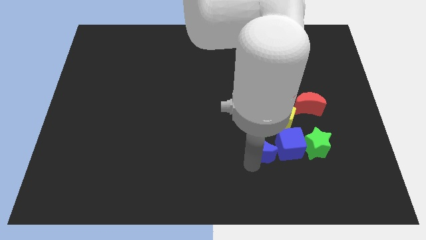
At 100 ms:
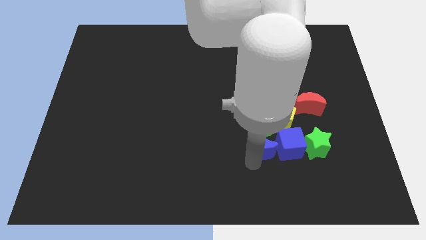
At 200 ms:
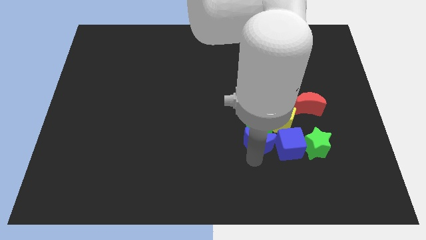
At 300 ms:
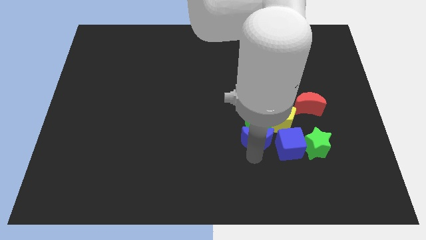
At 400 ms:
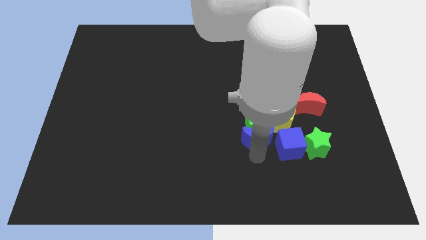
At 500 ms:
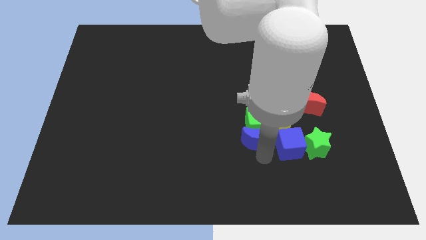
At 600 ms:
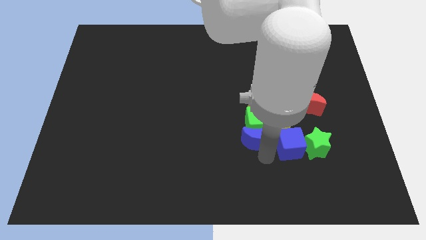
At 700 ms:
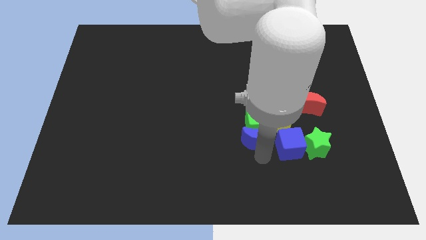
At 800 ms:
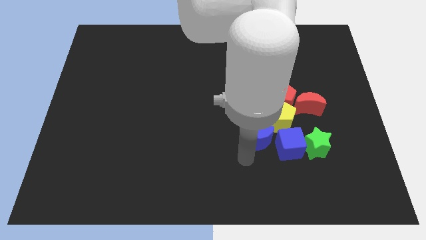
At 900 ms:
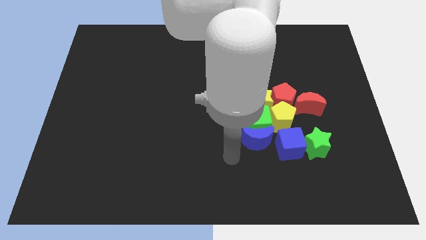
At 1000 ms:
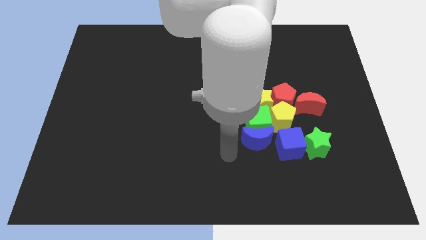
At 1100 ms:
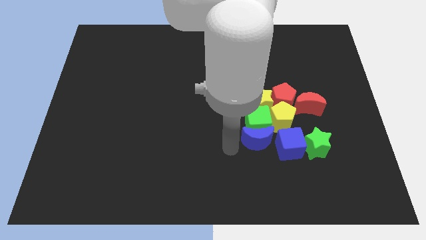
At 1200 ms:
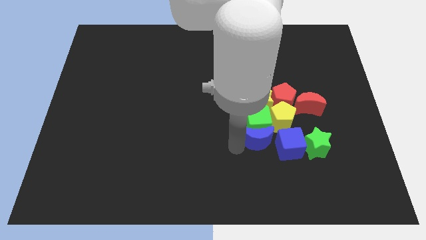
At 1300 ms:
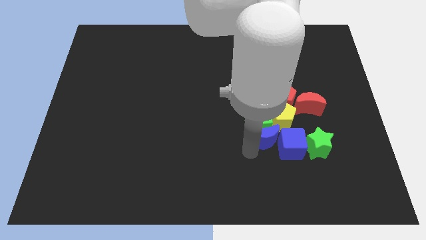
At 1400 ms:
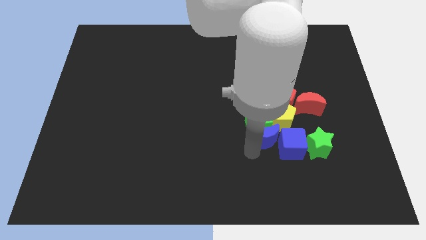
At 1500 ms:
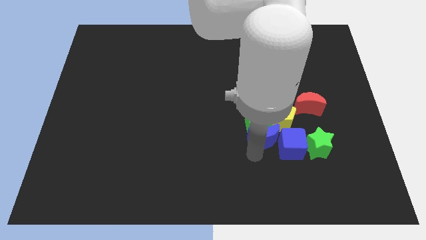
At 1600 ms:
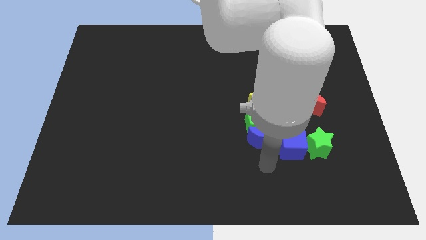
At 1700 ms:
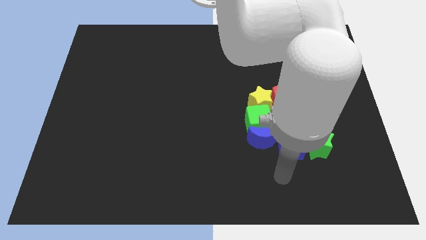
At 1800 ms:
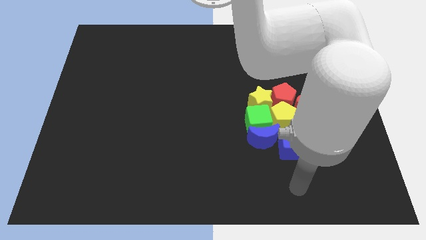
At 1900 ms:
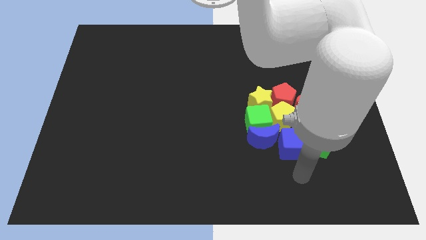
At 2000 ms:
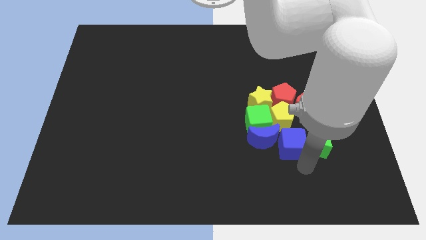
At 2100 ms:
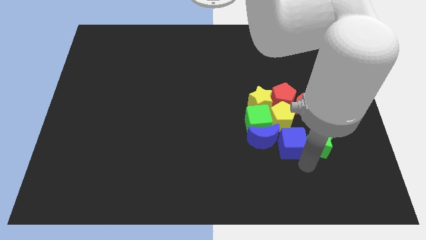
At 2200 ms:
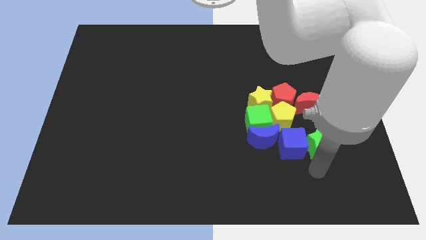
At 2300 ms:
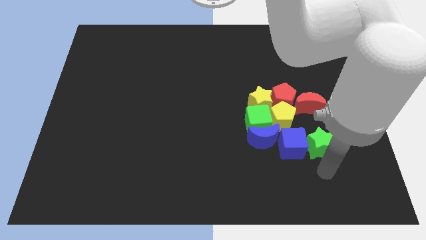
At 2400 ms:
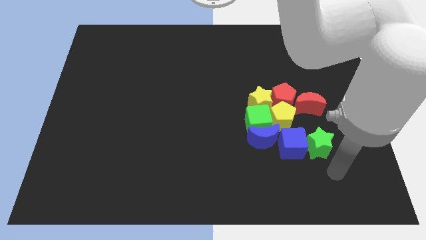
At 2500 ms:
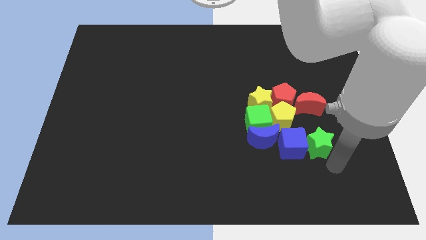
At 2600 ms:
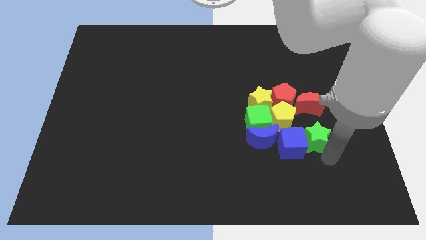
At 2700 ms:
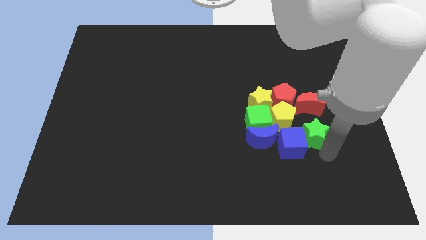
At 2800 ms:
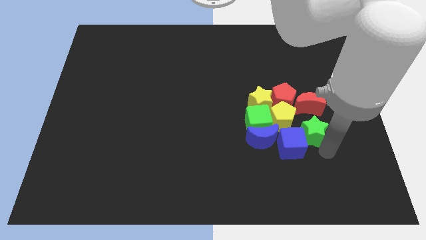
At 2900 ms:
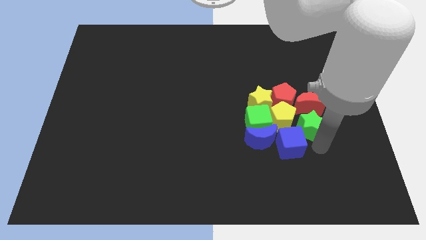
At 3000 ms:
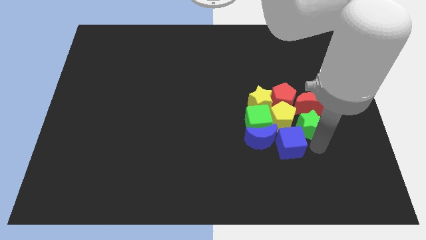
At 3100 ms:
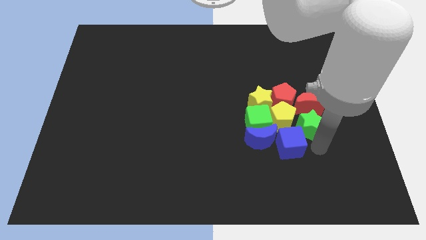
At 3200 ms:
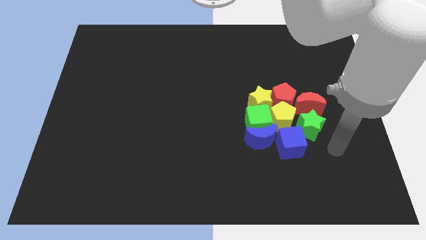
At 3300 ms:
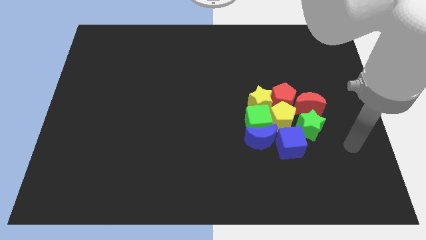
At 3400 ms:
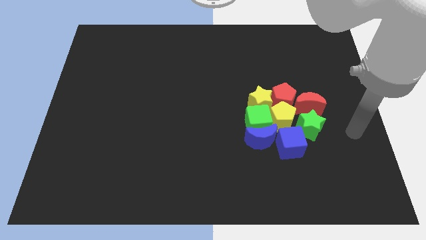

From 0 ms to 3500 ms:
adjust the blue blocks and green star into the group of blocks

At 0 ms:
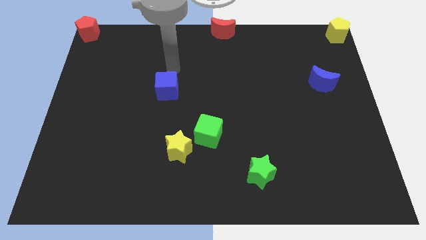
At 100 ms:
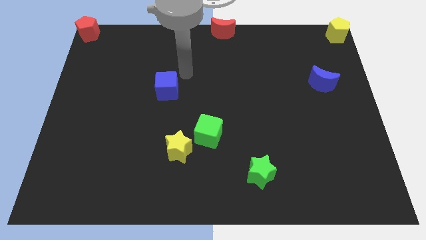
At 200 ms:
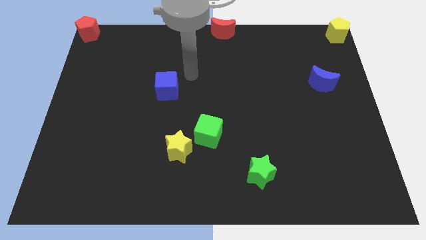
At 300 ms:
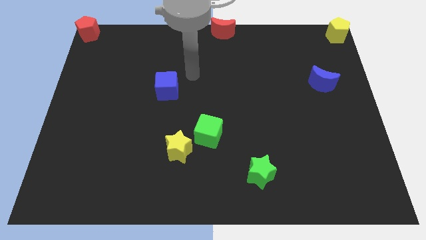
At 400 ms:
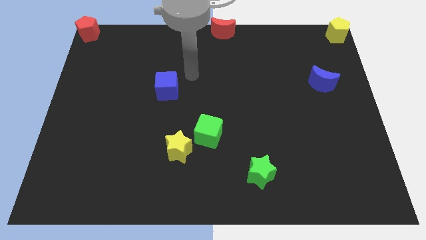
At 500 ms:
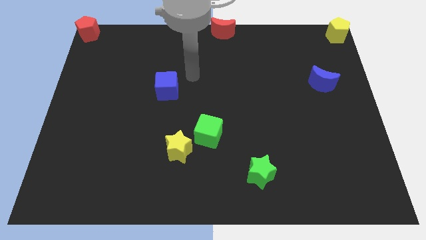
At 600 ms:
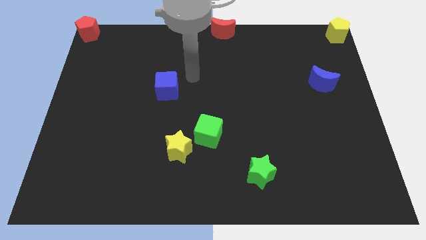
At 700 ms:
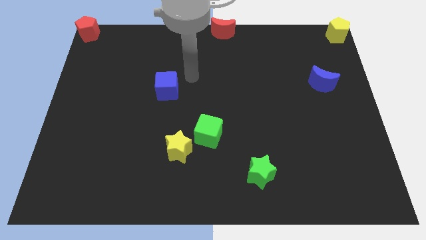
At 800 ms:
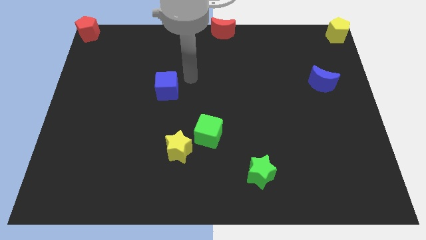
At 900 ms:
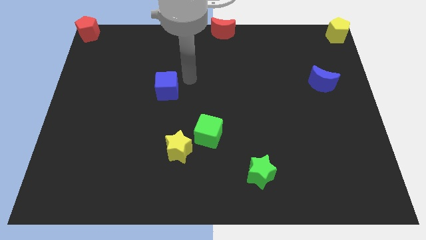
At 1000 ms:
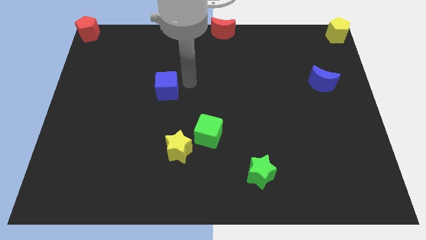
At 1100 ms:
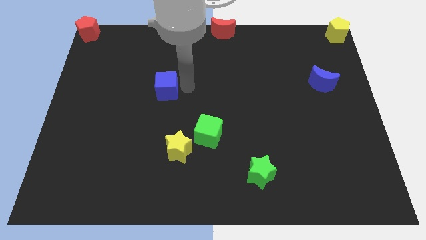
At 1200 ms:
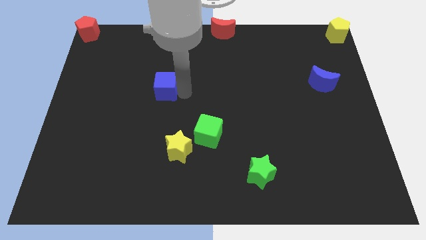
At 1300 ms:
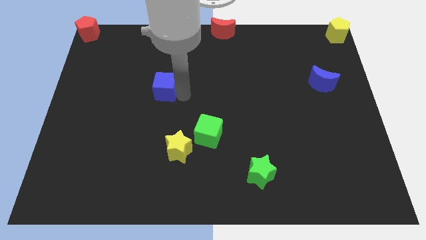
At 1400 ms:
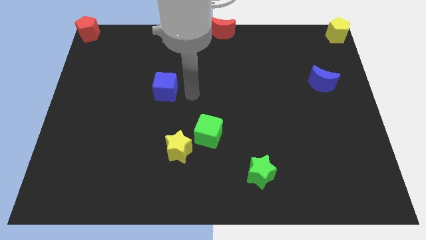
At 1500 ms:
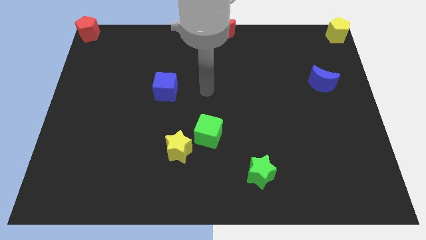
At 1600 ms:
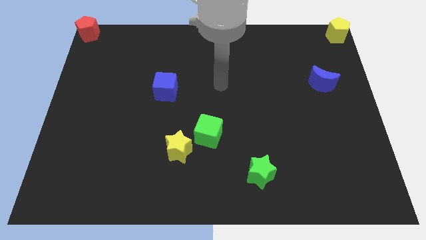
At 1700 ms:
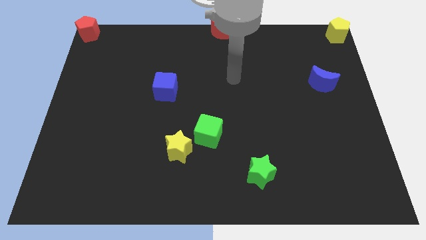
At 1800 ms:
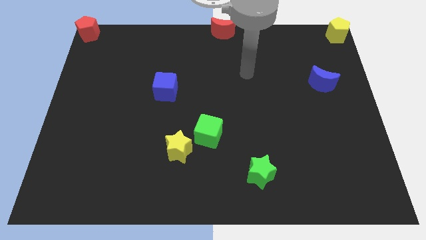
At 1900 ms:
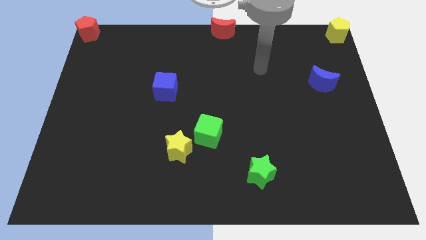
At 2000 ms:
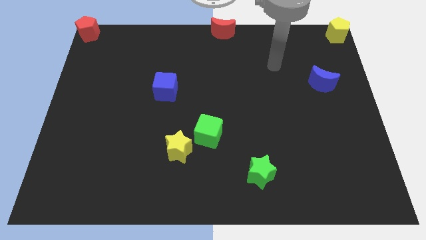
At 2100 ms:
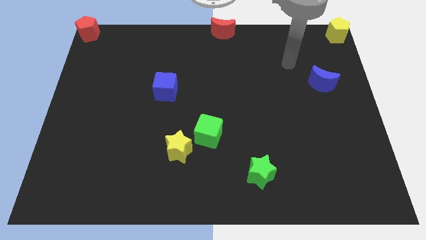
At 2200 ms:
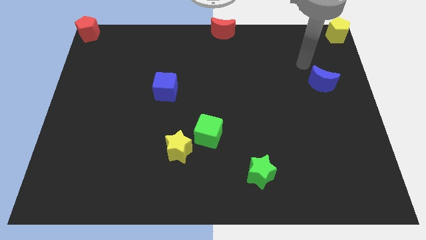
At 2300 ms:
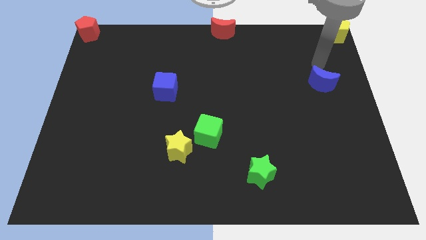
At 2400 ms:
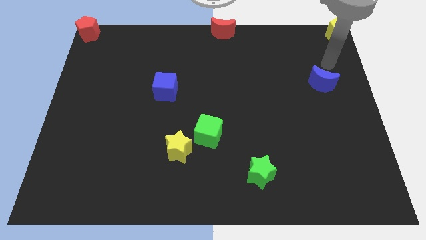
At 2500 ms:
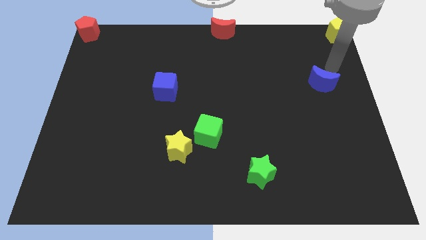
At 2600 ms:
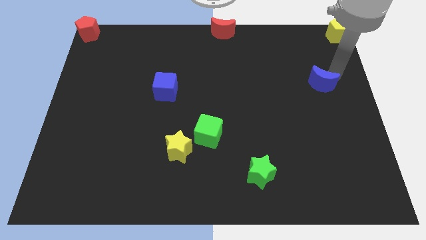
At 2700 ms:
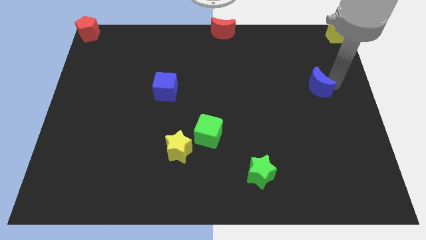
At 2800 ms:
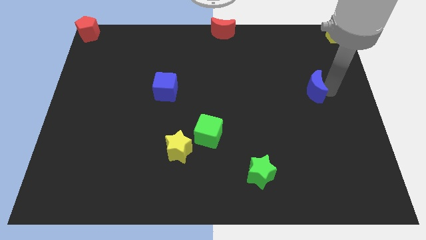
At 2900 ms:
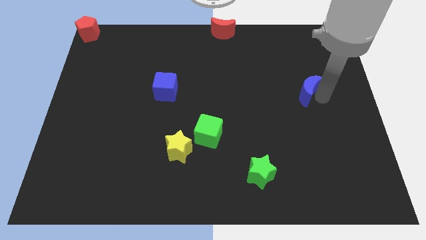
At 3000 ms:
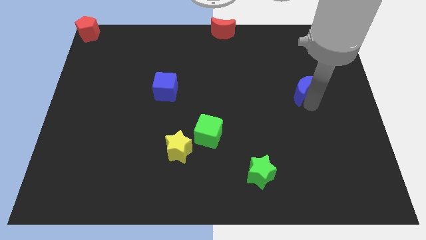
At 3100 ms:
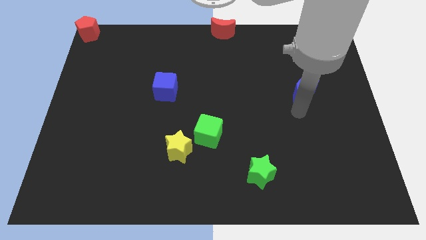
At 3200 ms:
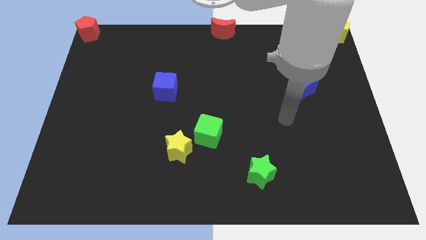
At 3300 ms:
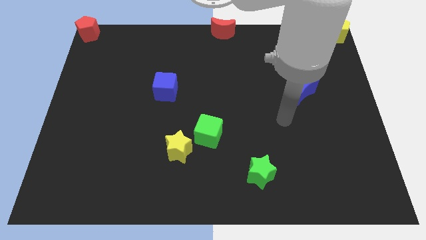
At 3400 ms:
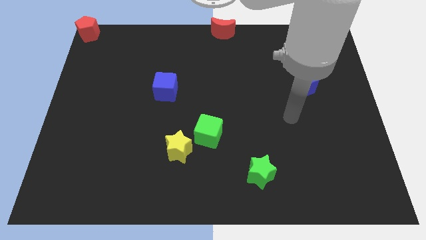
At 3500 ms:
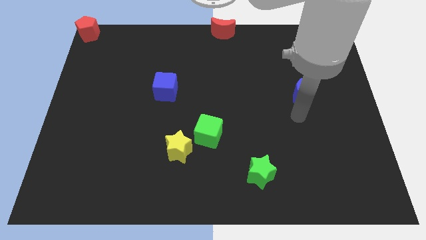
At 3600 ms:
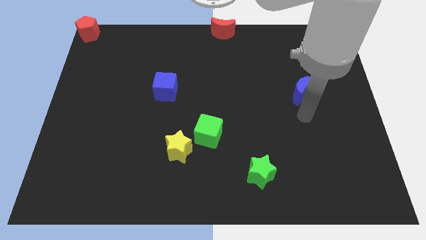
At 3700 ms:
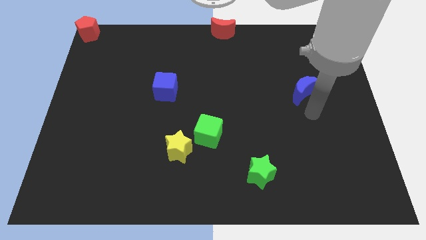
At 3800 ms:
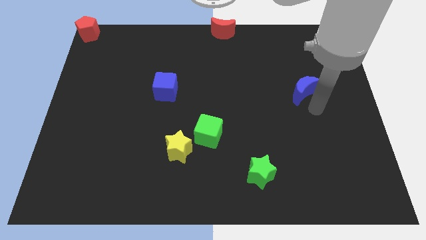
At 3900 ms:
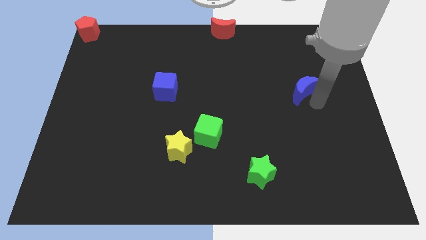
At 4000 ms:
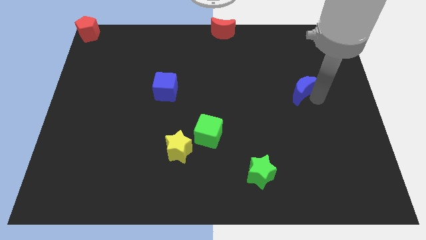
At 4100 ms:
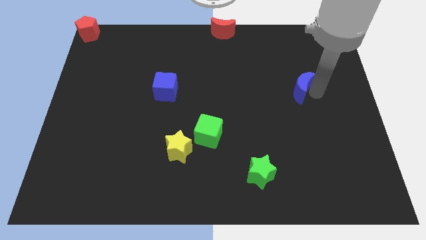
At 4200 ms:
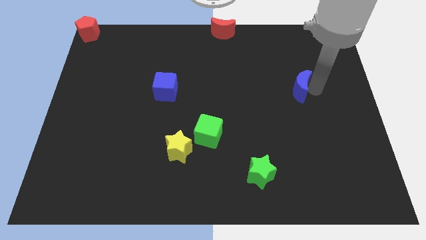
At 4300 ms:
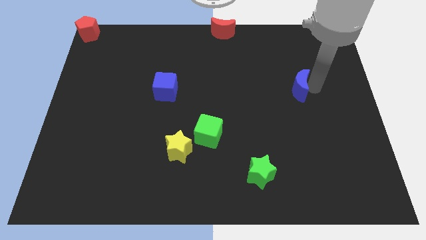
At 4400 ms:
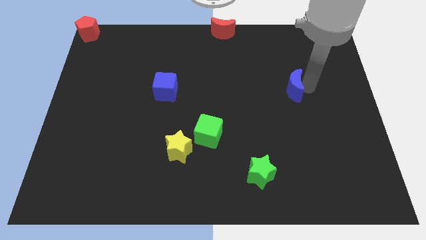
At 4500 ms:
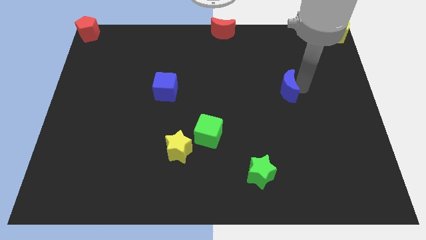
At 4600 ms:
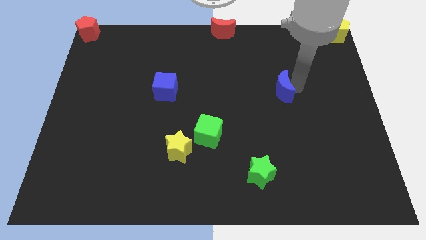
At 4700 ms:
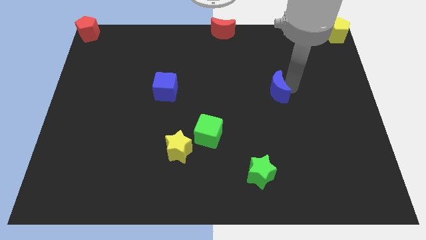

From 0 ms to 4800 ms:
adjust blue blocks slightly to make a horizontal line

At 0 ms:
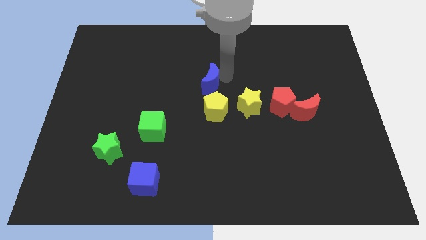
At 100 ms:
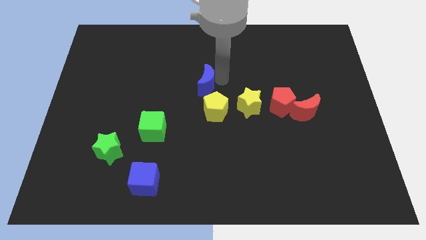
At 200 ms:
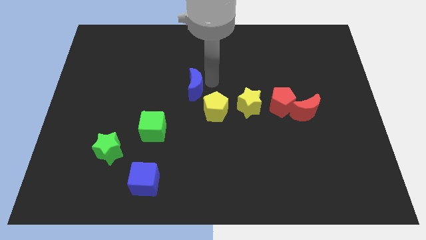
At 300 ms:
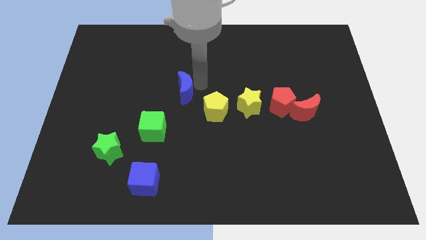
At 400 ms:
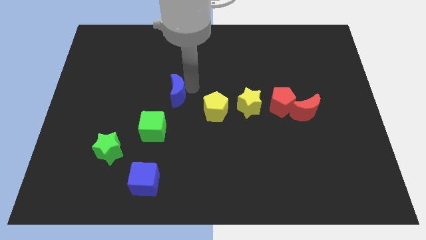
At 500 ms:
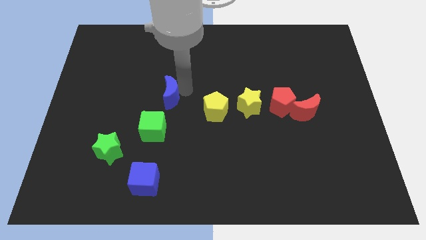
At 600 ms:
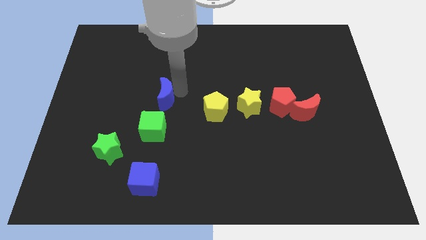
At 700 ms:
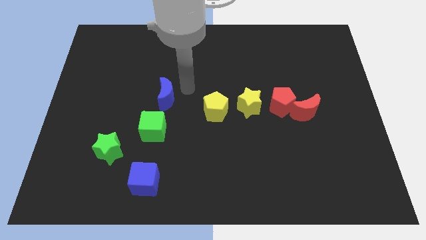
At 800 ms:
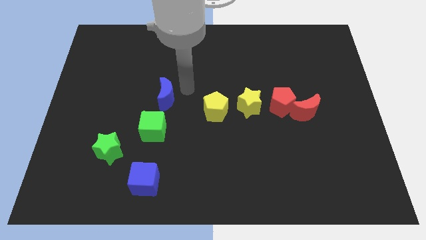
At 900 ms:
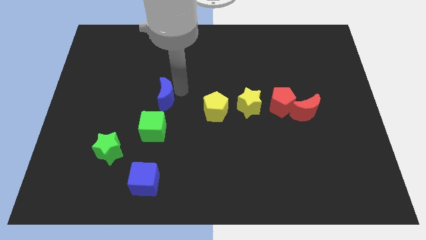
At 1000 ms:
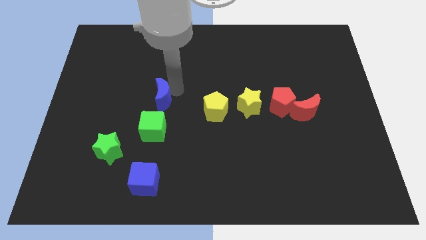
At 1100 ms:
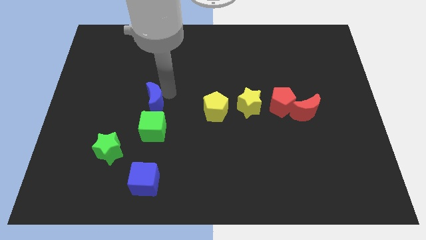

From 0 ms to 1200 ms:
move the blue crescent to the top of green cube
